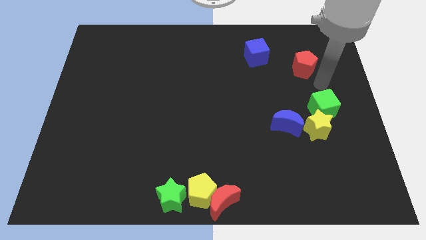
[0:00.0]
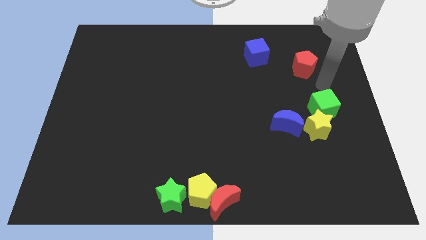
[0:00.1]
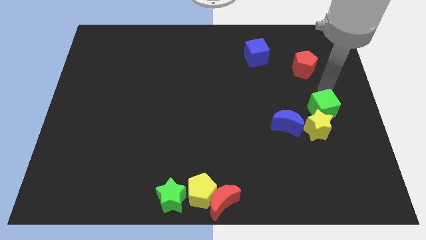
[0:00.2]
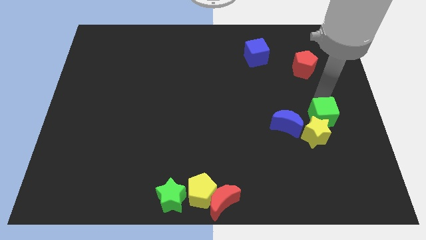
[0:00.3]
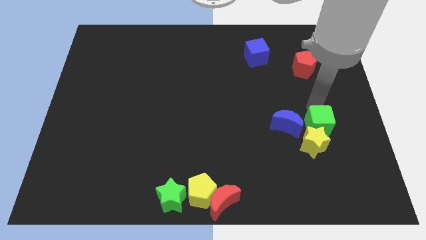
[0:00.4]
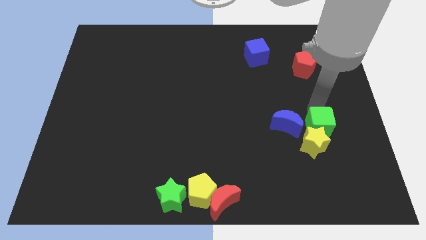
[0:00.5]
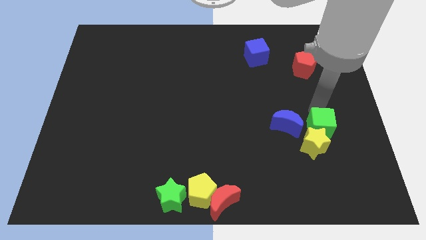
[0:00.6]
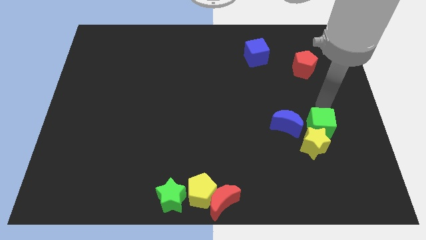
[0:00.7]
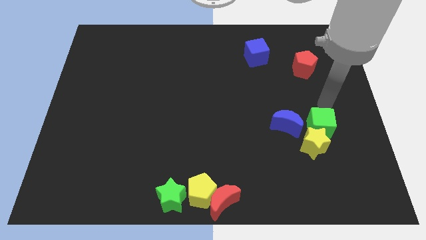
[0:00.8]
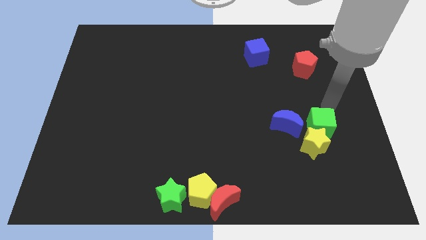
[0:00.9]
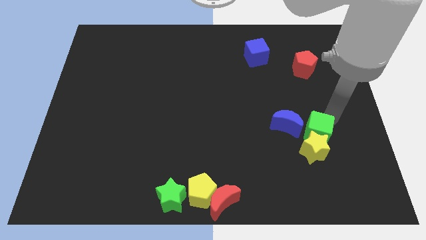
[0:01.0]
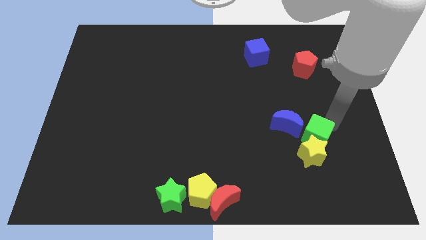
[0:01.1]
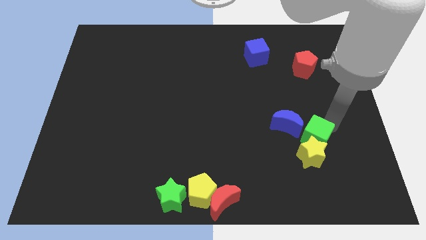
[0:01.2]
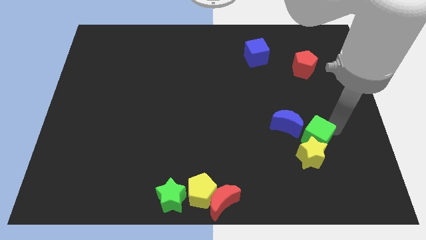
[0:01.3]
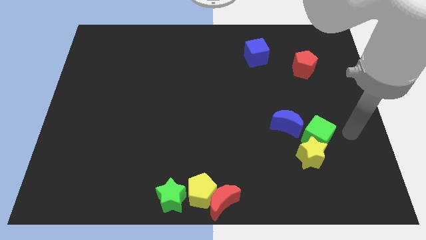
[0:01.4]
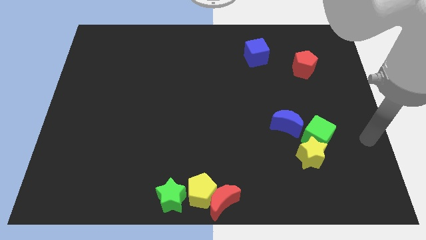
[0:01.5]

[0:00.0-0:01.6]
slide the green cube along with the yellow star towards the bottom

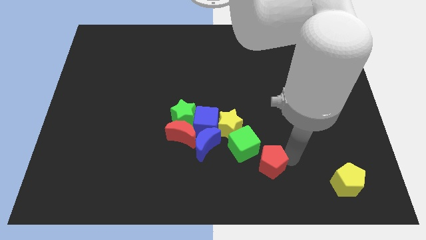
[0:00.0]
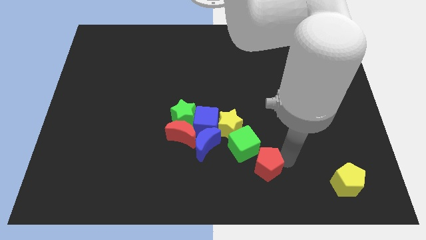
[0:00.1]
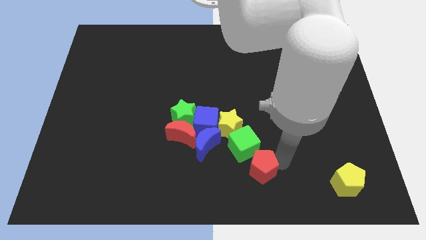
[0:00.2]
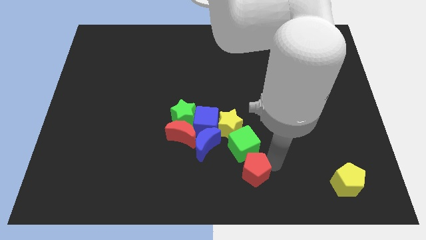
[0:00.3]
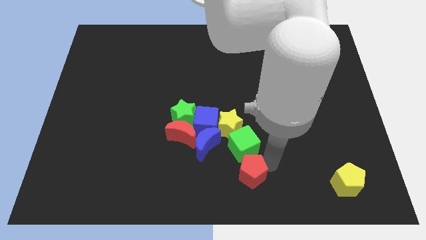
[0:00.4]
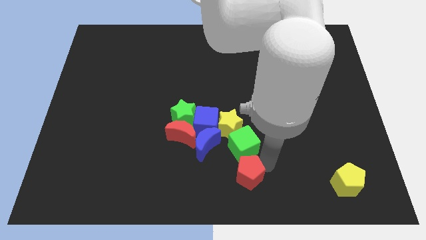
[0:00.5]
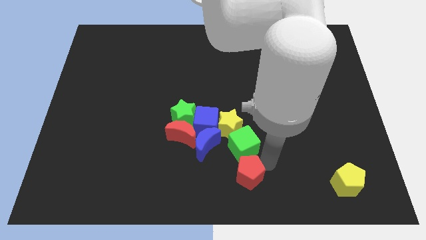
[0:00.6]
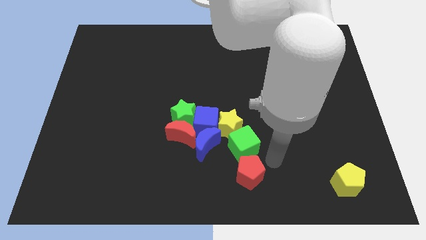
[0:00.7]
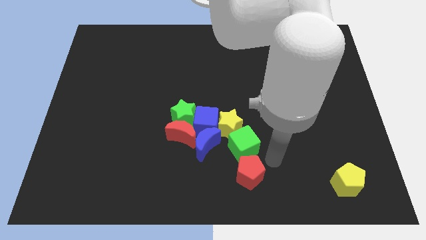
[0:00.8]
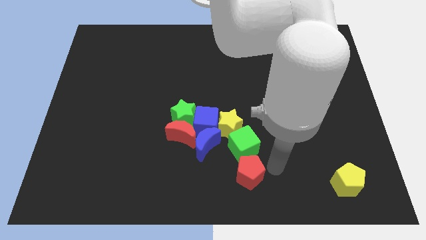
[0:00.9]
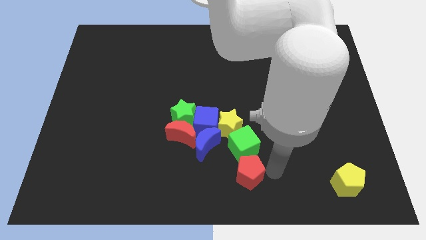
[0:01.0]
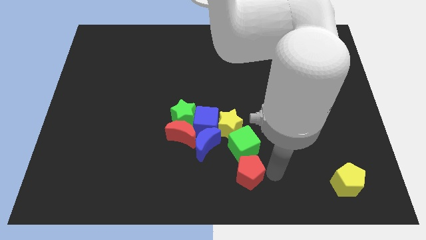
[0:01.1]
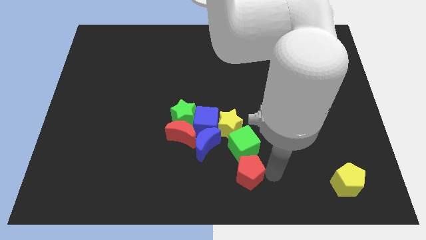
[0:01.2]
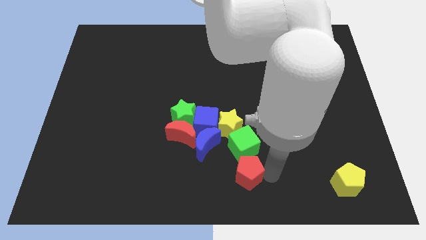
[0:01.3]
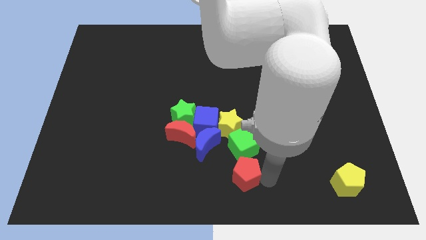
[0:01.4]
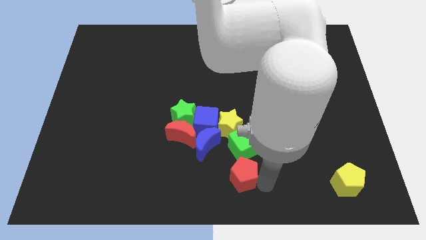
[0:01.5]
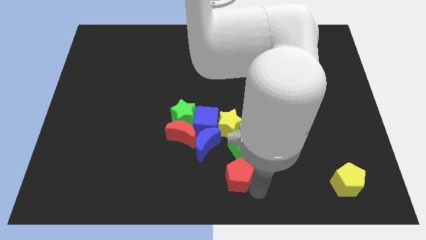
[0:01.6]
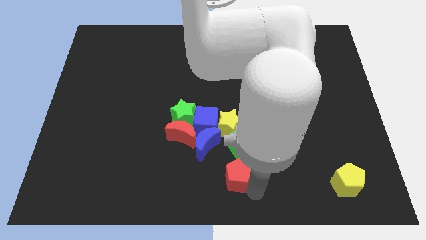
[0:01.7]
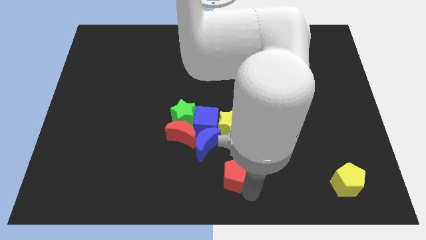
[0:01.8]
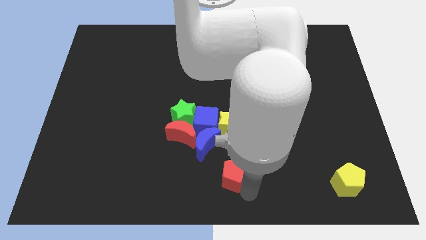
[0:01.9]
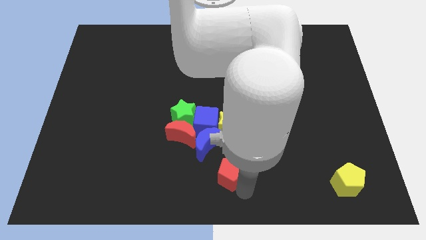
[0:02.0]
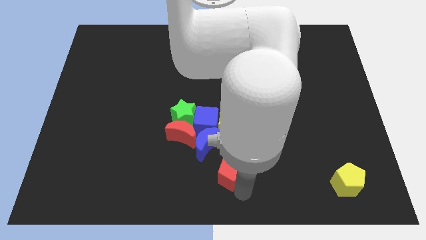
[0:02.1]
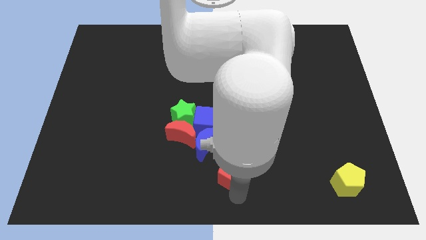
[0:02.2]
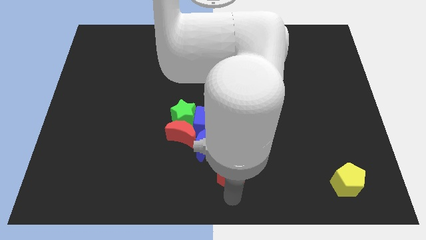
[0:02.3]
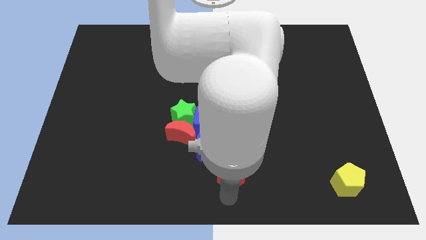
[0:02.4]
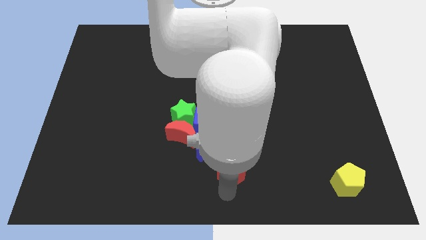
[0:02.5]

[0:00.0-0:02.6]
slide the red pentagon under green cube

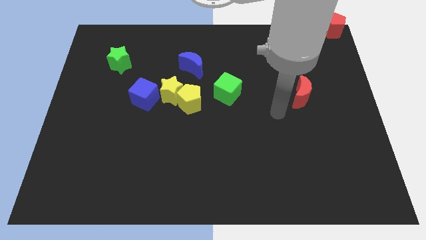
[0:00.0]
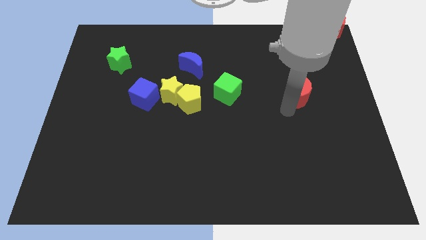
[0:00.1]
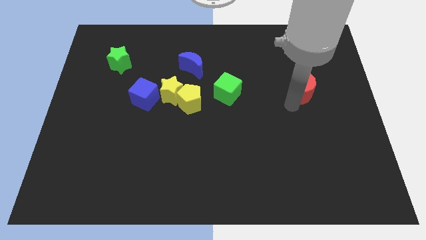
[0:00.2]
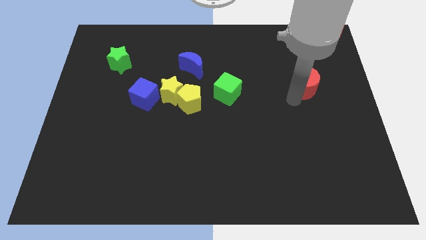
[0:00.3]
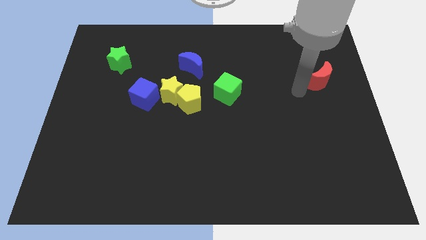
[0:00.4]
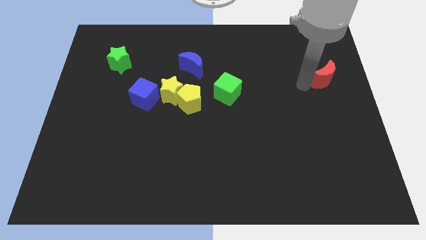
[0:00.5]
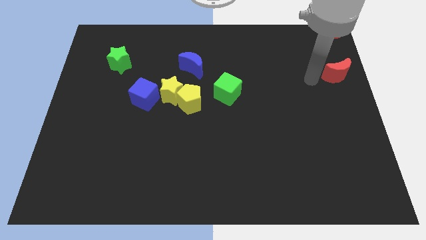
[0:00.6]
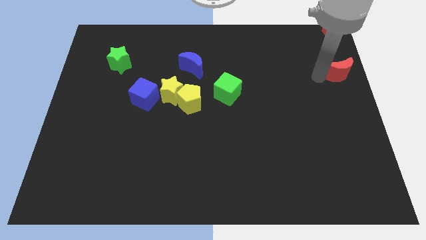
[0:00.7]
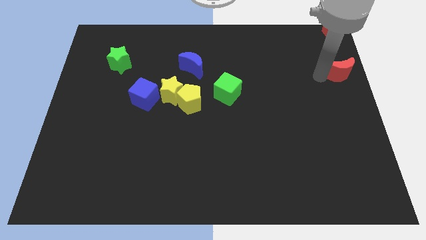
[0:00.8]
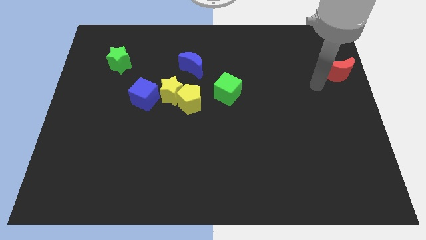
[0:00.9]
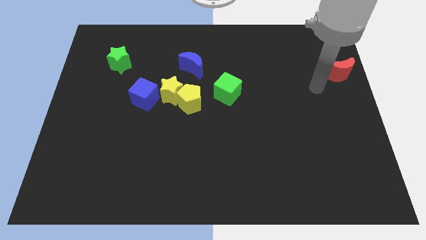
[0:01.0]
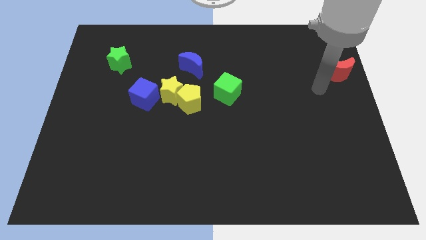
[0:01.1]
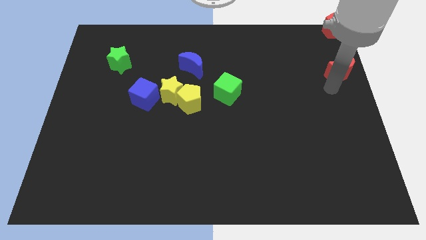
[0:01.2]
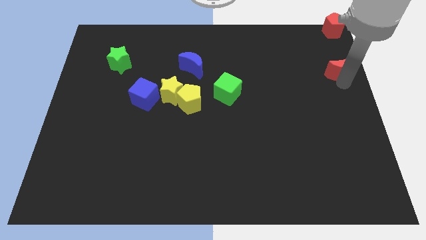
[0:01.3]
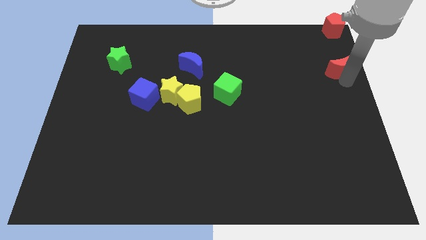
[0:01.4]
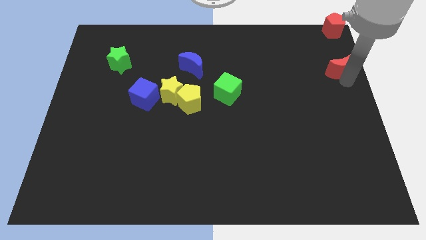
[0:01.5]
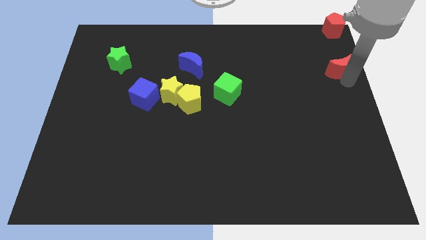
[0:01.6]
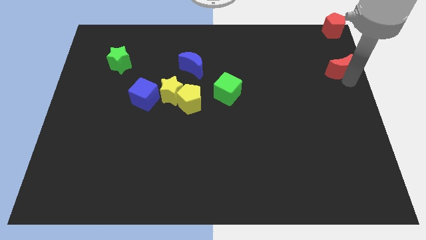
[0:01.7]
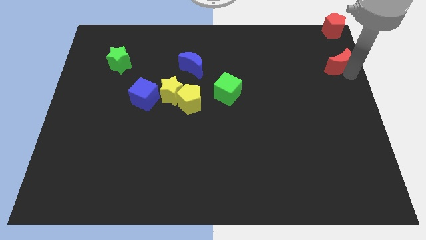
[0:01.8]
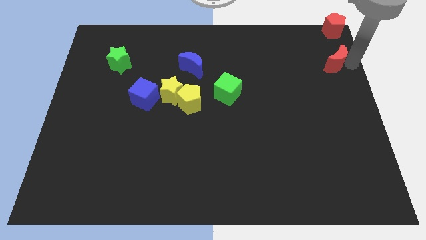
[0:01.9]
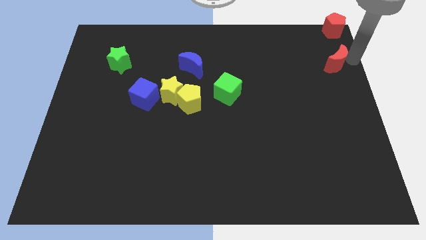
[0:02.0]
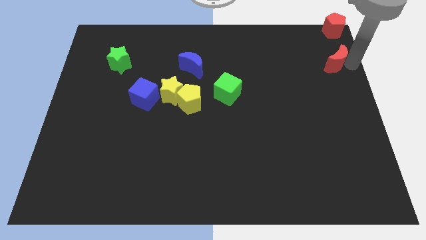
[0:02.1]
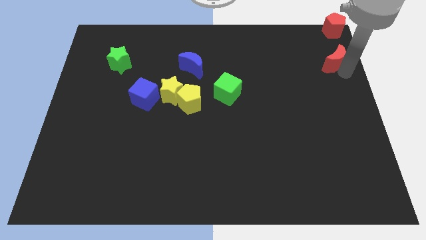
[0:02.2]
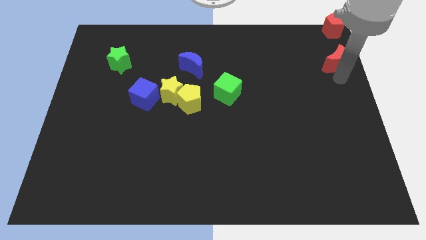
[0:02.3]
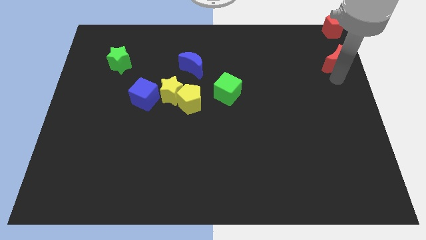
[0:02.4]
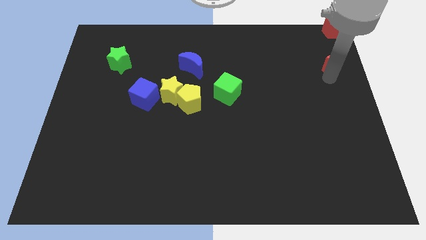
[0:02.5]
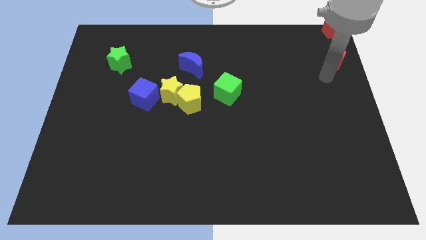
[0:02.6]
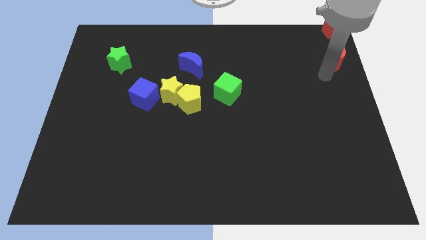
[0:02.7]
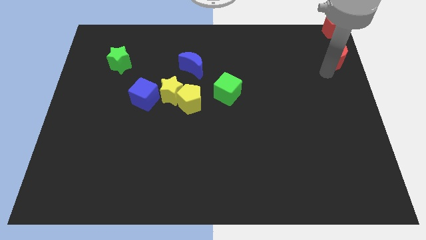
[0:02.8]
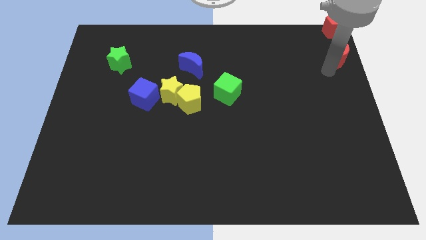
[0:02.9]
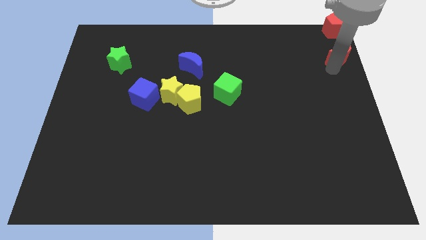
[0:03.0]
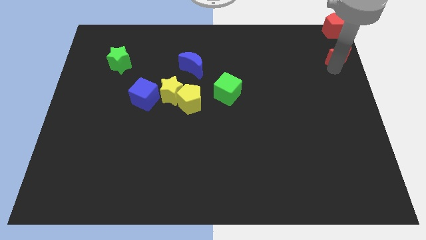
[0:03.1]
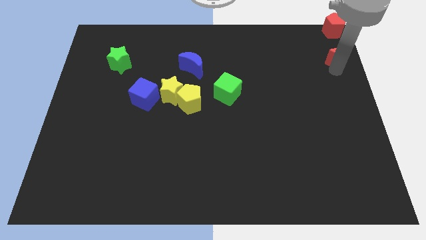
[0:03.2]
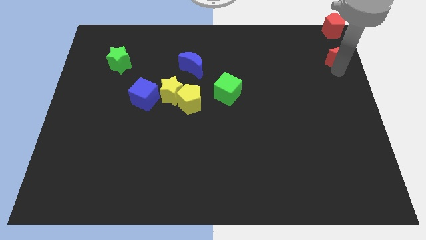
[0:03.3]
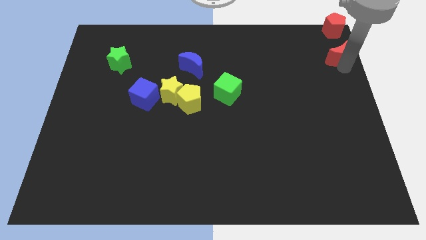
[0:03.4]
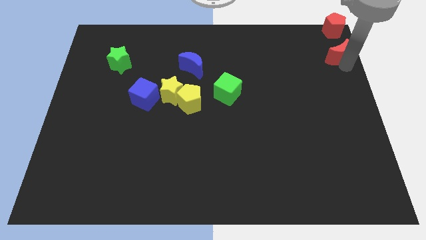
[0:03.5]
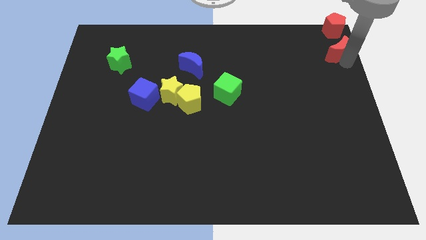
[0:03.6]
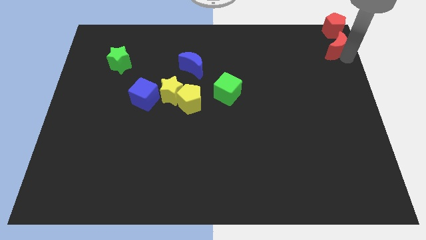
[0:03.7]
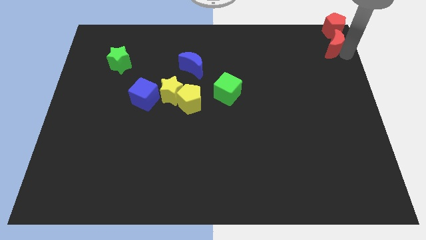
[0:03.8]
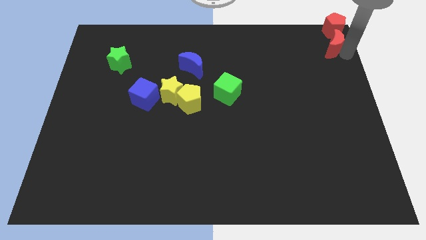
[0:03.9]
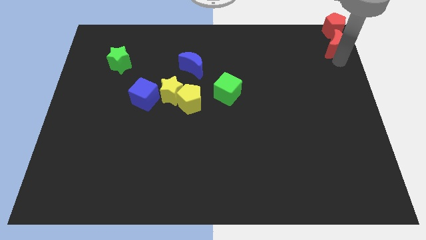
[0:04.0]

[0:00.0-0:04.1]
push the red crescent below the red pentagon

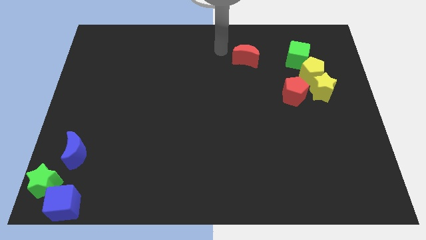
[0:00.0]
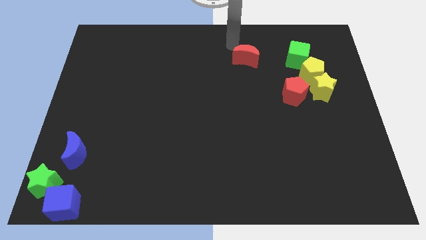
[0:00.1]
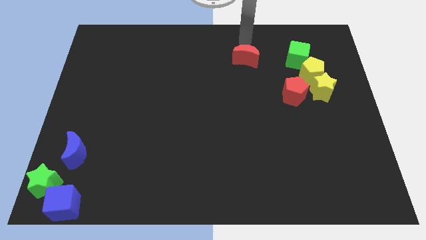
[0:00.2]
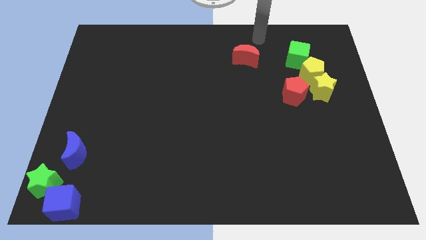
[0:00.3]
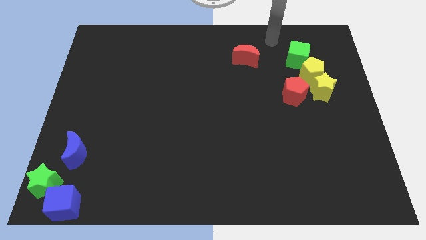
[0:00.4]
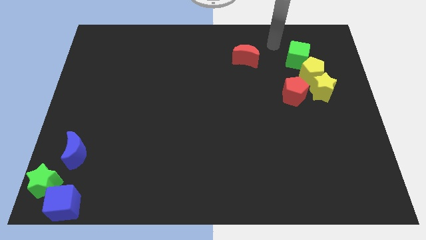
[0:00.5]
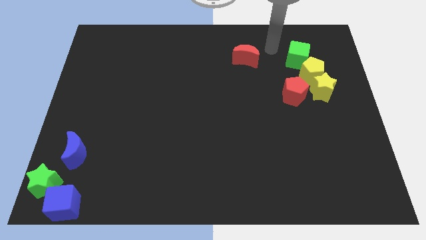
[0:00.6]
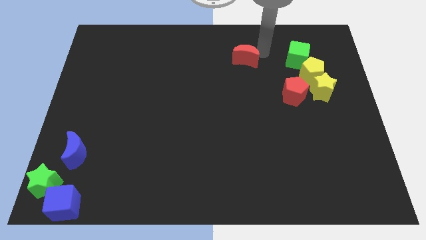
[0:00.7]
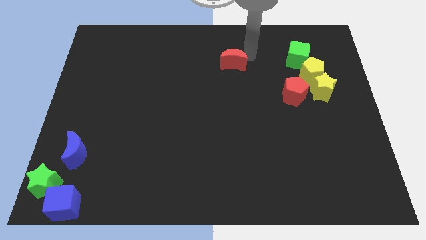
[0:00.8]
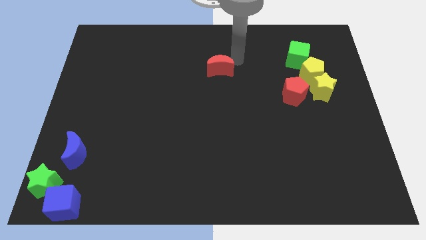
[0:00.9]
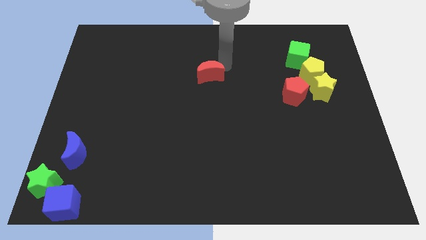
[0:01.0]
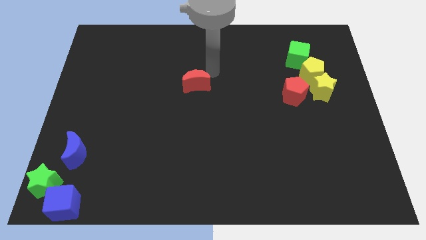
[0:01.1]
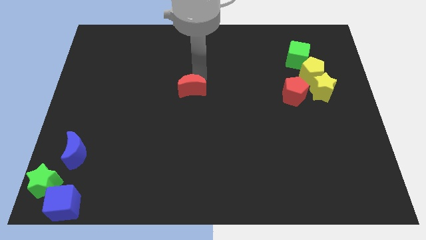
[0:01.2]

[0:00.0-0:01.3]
move the red crescent to the left of the red pentagon
